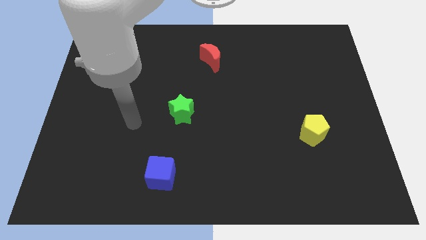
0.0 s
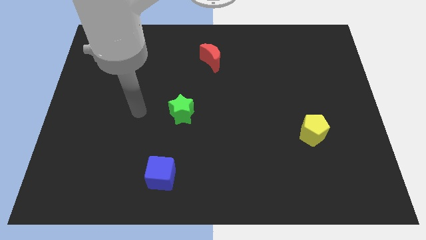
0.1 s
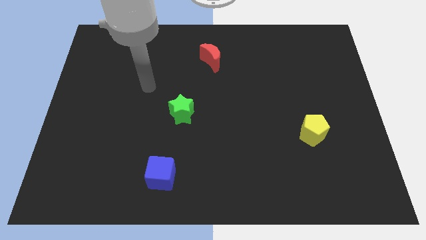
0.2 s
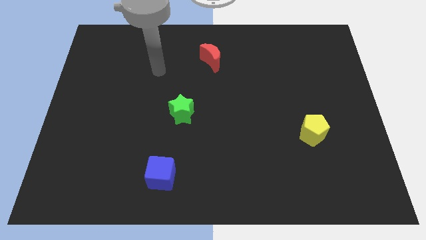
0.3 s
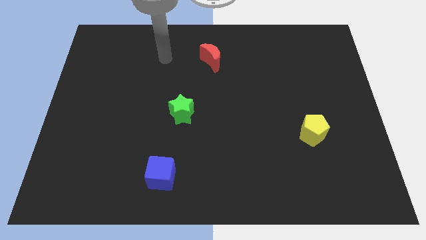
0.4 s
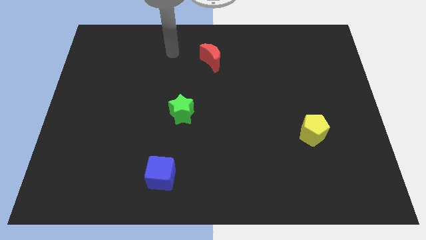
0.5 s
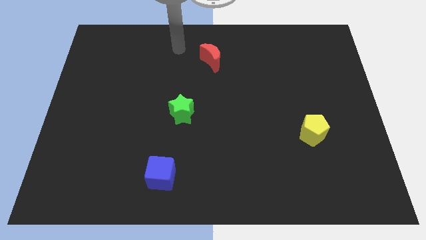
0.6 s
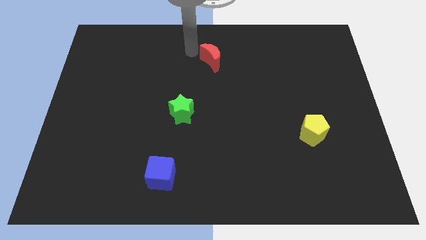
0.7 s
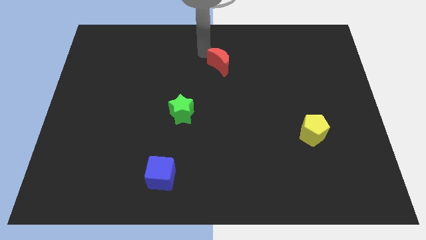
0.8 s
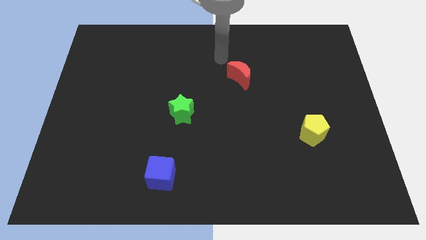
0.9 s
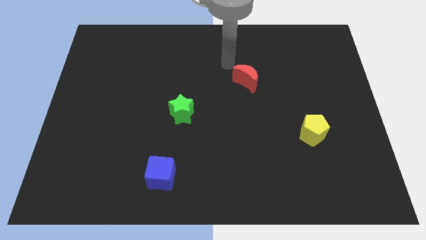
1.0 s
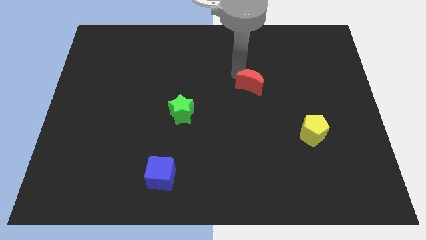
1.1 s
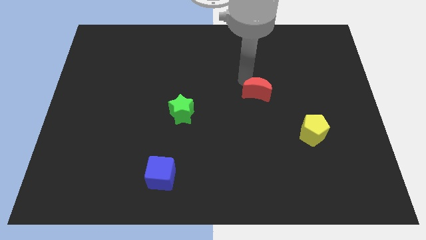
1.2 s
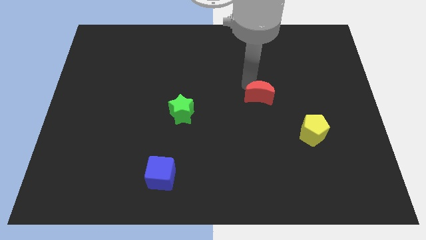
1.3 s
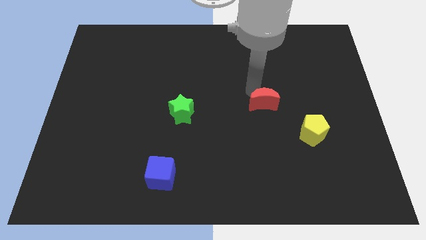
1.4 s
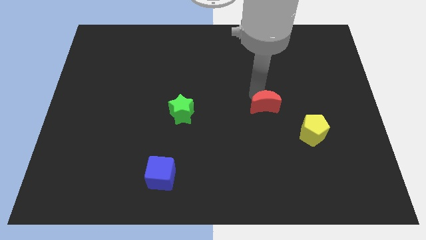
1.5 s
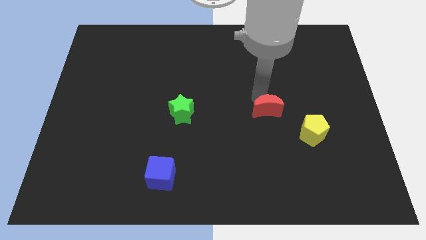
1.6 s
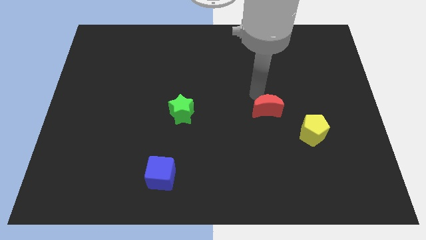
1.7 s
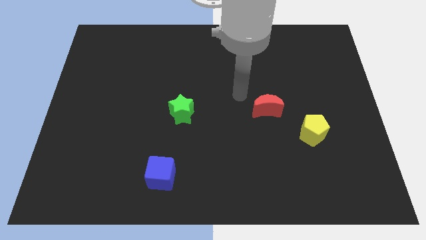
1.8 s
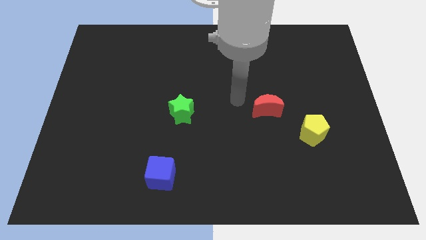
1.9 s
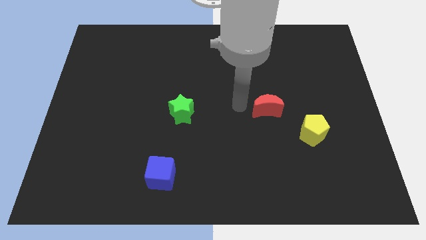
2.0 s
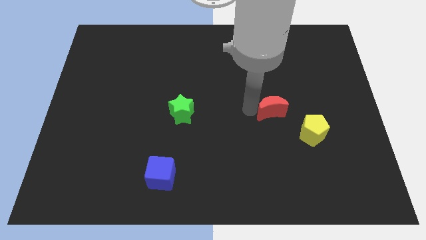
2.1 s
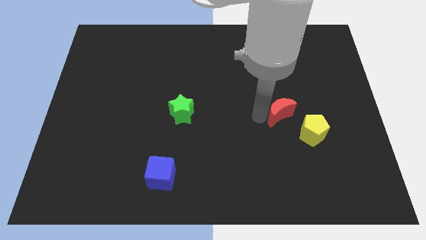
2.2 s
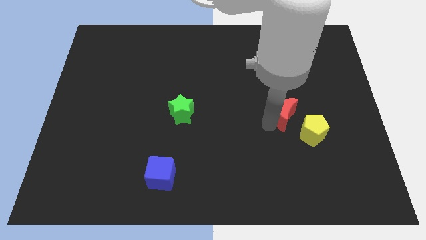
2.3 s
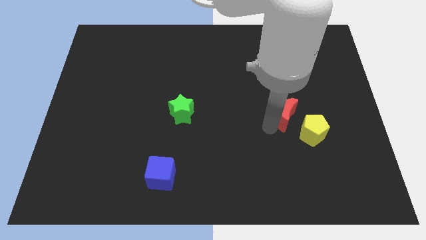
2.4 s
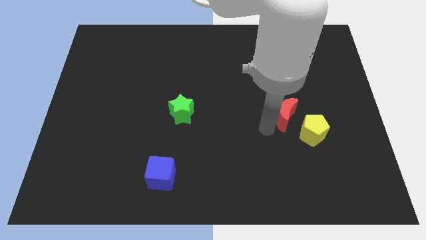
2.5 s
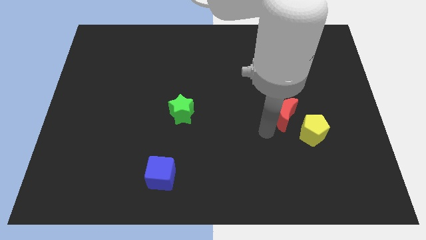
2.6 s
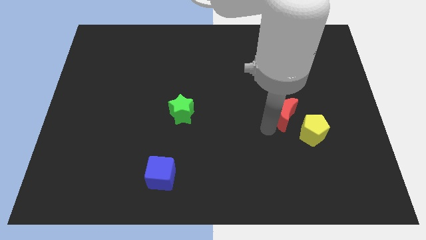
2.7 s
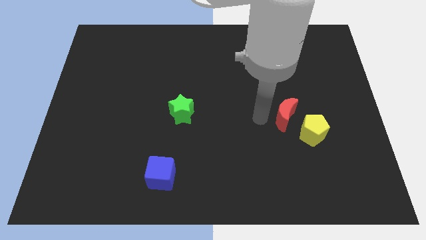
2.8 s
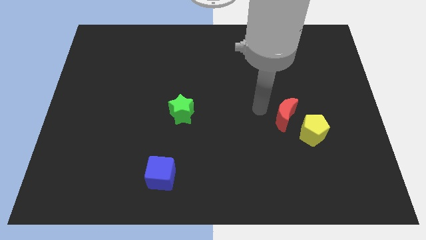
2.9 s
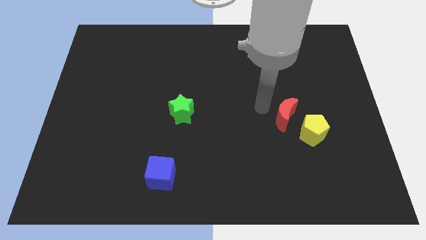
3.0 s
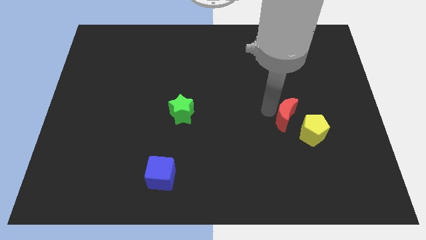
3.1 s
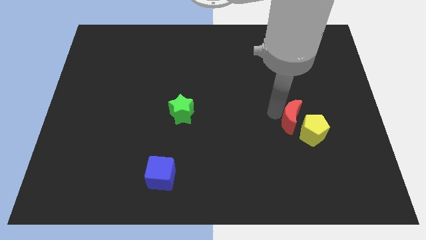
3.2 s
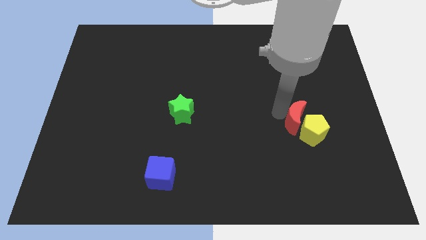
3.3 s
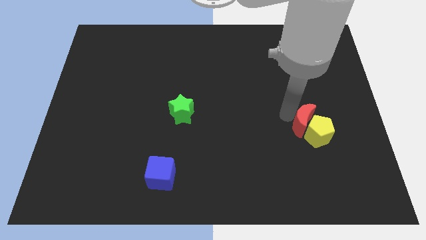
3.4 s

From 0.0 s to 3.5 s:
move the red block towards the pentagon

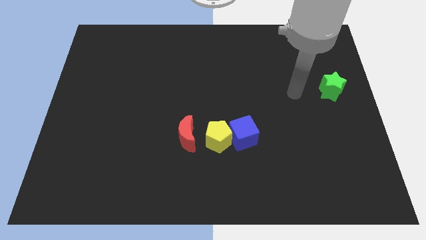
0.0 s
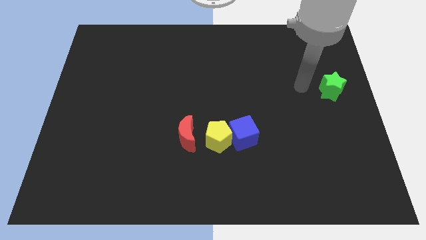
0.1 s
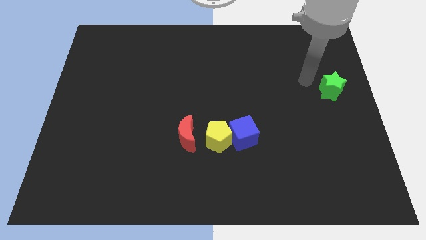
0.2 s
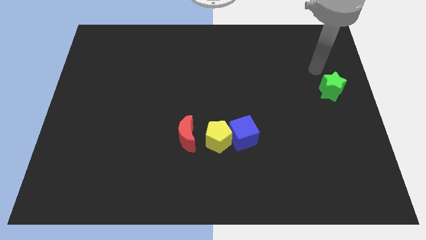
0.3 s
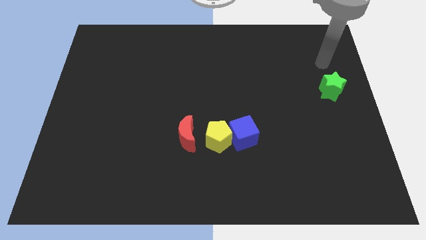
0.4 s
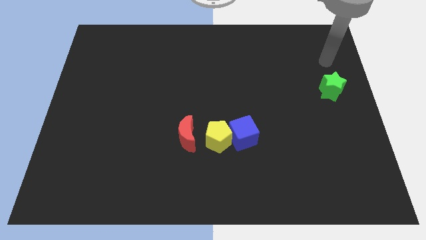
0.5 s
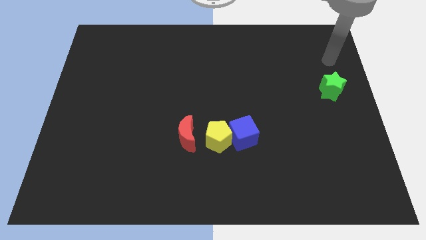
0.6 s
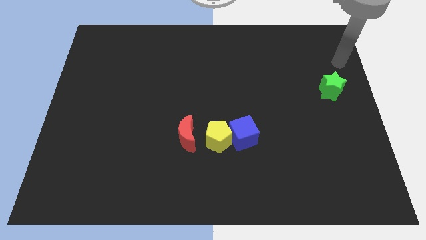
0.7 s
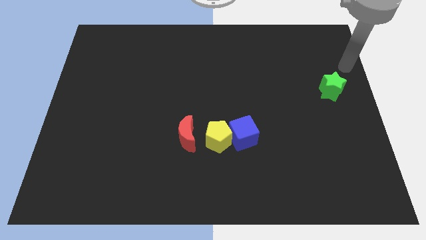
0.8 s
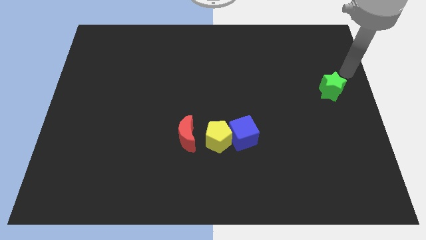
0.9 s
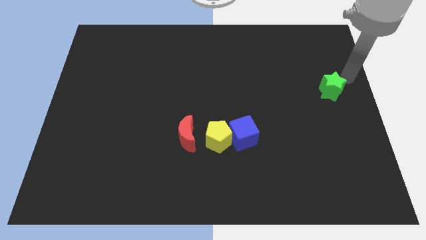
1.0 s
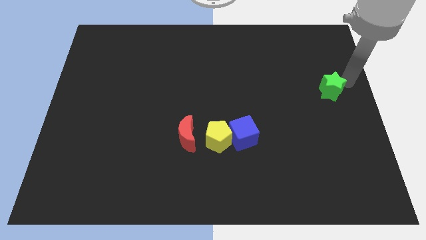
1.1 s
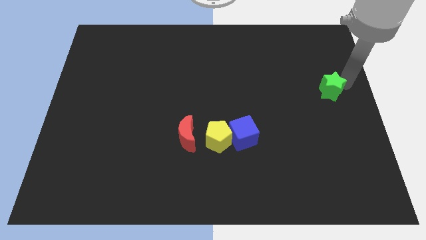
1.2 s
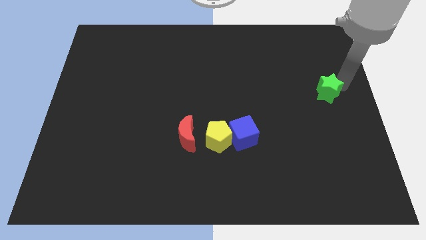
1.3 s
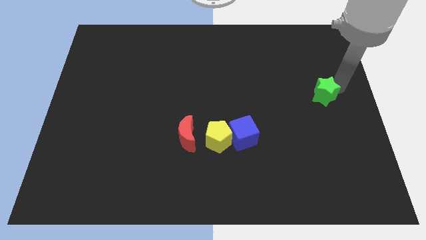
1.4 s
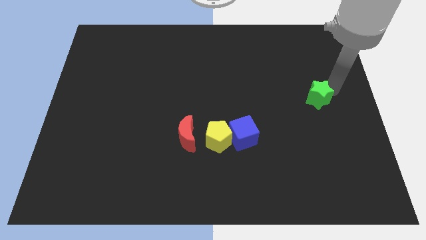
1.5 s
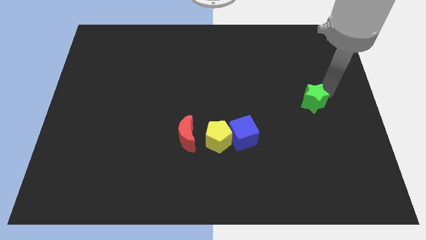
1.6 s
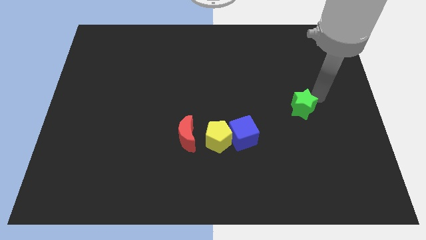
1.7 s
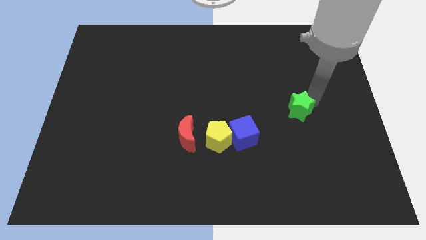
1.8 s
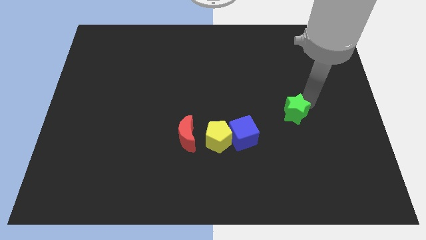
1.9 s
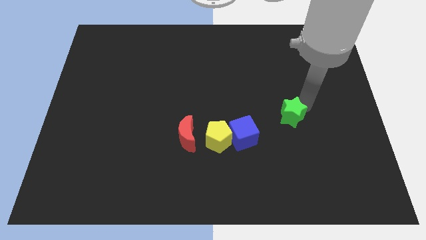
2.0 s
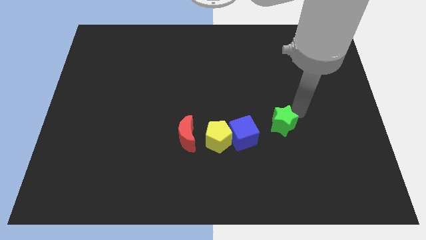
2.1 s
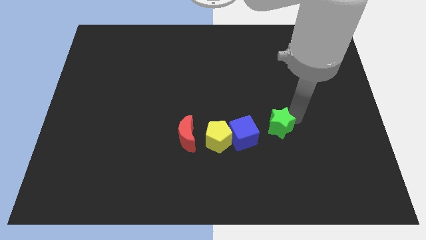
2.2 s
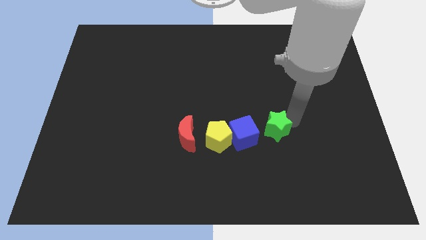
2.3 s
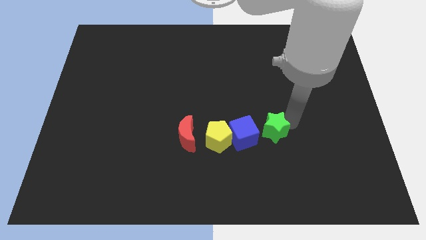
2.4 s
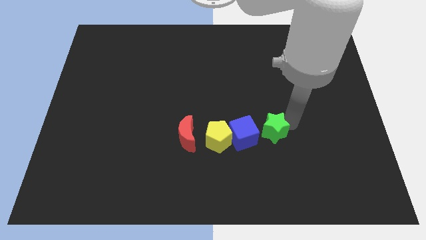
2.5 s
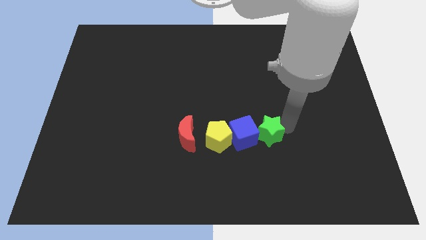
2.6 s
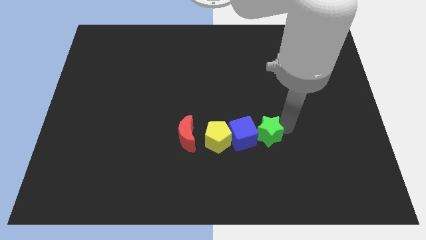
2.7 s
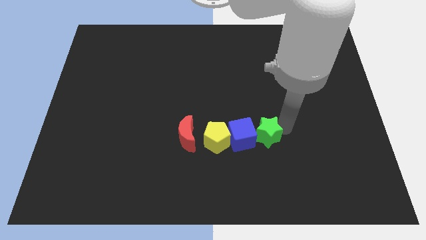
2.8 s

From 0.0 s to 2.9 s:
slide the green block towards the cube

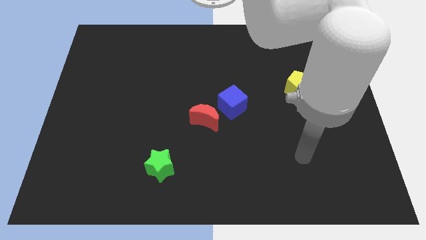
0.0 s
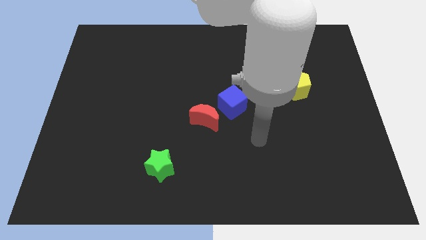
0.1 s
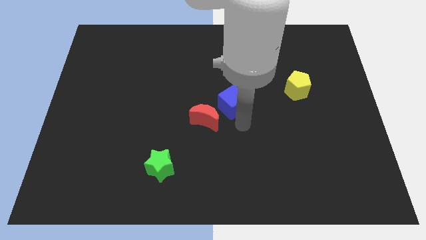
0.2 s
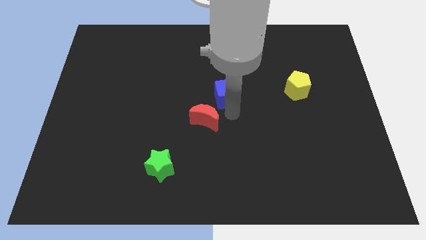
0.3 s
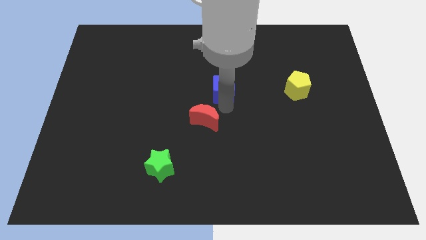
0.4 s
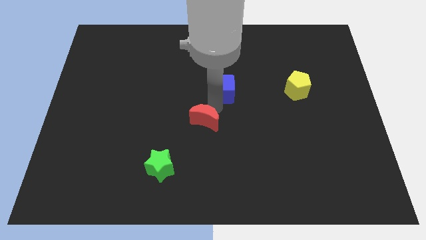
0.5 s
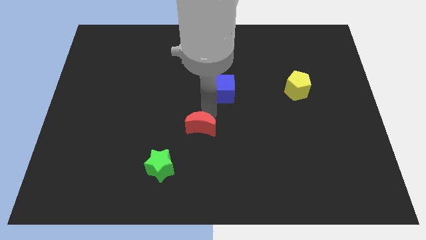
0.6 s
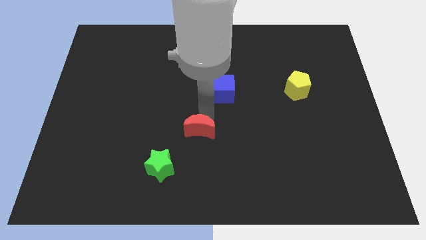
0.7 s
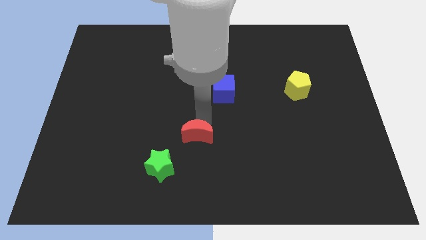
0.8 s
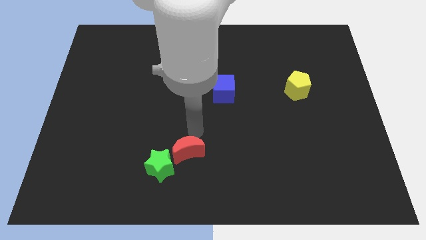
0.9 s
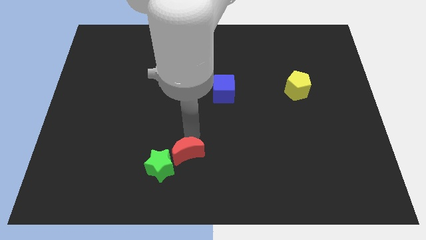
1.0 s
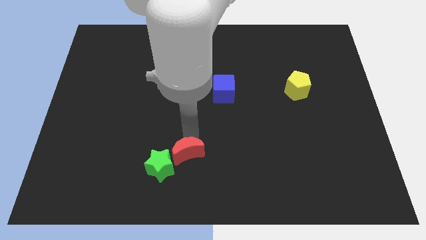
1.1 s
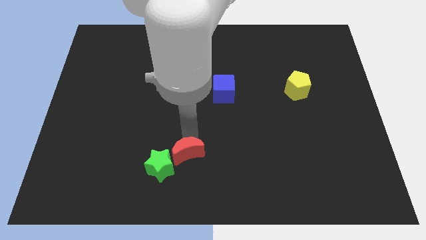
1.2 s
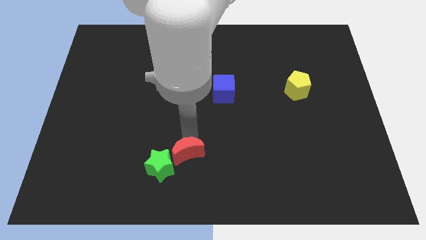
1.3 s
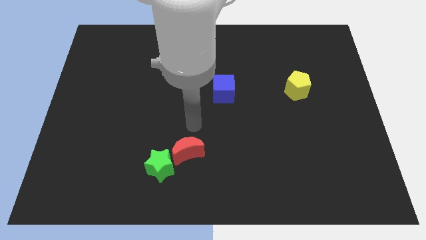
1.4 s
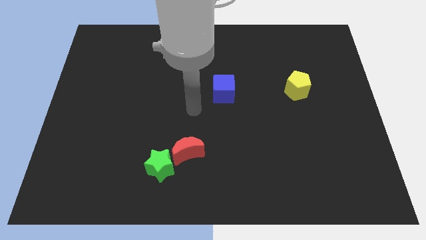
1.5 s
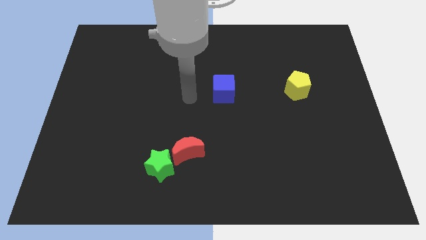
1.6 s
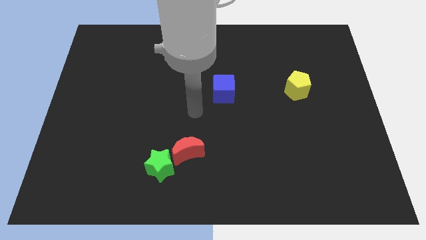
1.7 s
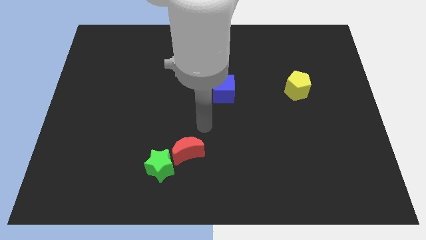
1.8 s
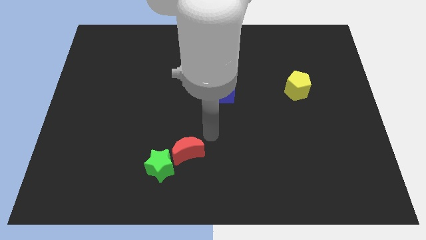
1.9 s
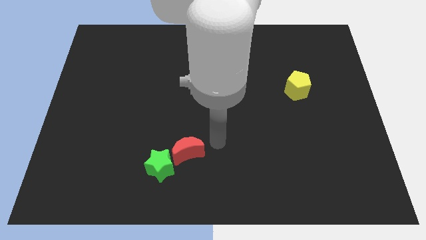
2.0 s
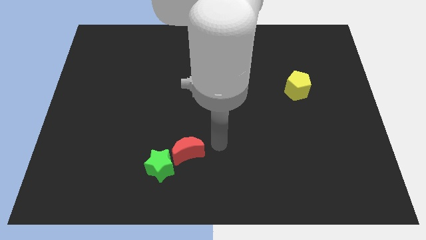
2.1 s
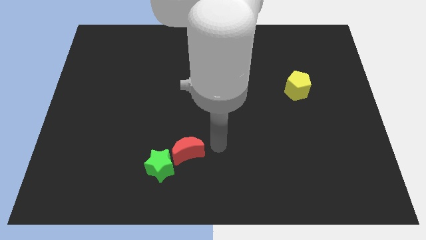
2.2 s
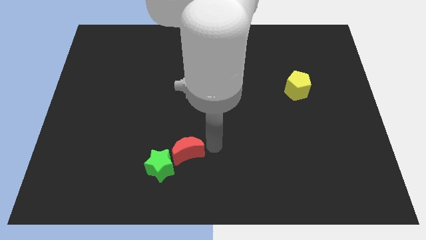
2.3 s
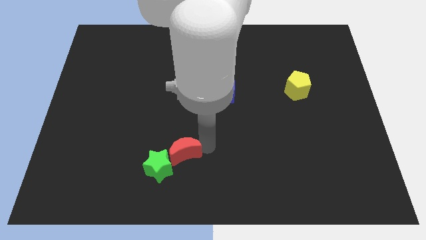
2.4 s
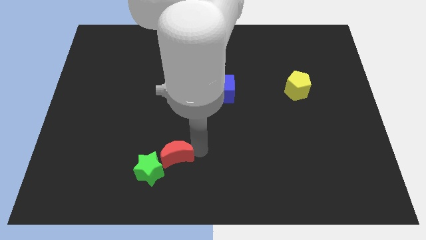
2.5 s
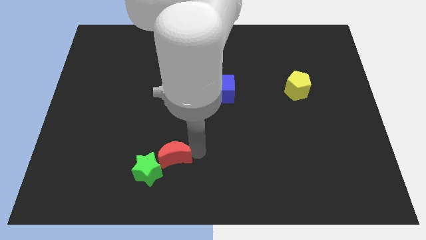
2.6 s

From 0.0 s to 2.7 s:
slide the red block towards the green block

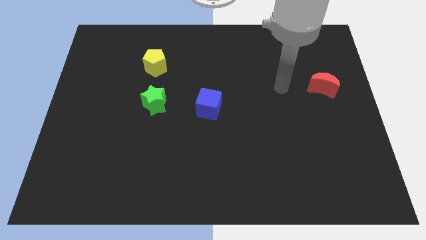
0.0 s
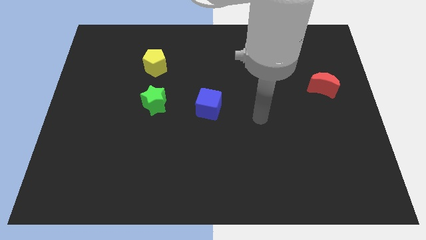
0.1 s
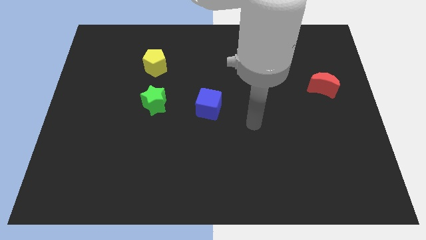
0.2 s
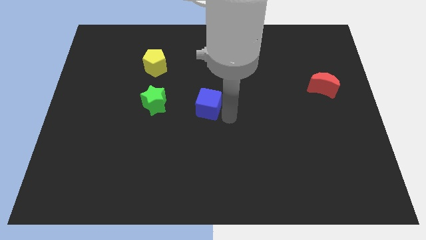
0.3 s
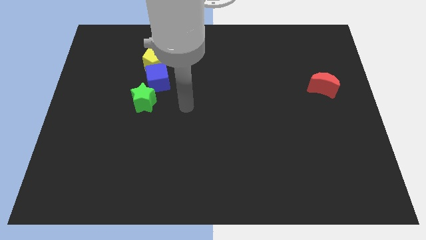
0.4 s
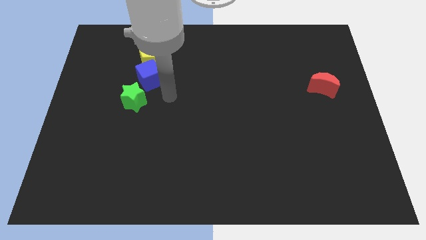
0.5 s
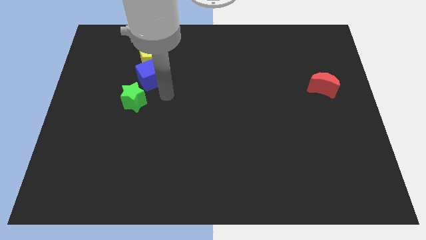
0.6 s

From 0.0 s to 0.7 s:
push the blue cube close to the yellow block
